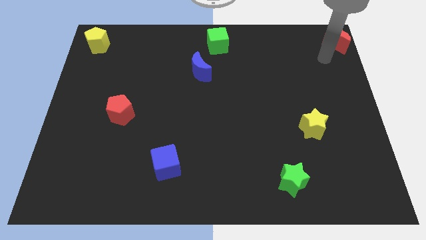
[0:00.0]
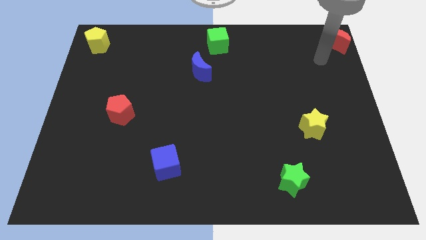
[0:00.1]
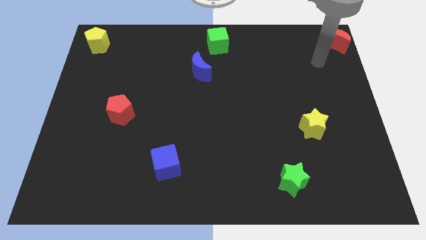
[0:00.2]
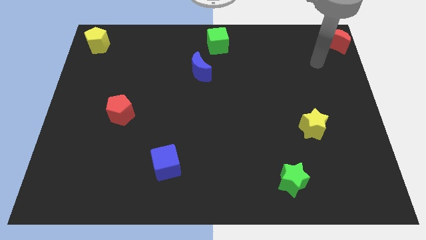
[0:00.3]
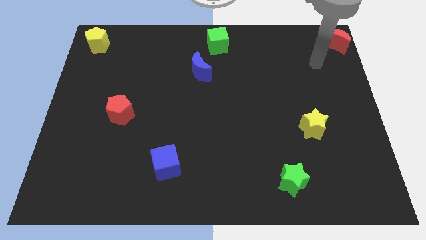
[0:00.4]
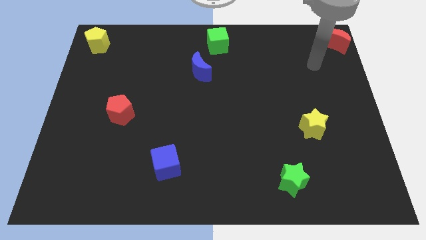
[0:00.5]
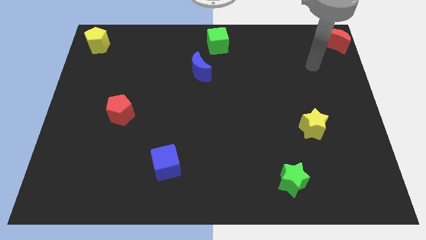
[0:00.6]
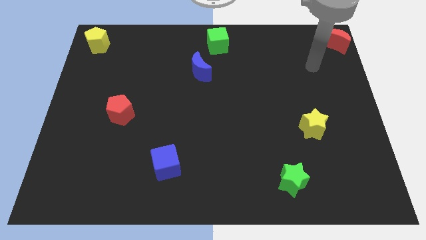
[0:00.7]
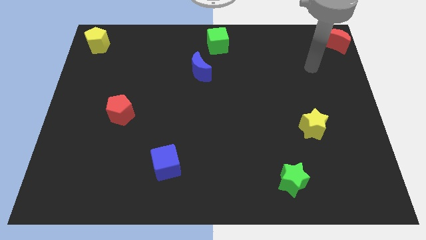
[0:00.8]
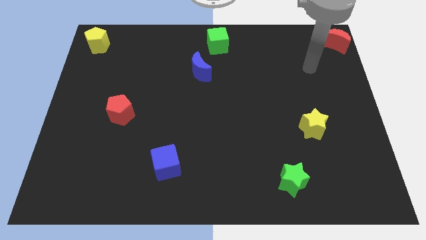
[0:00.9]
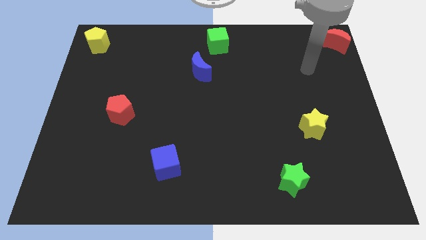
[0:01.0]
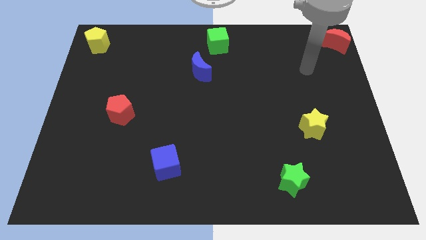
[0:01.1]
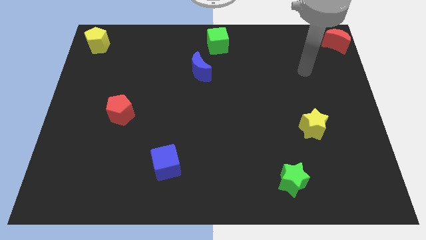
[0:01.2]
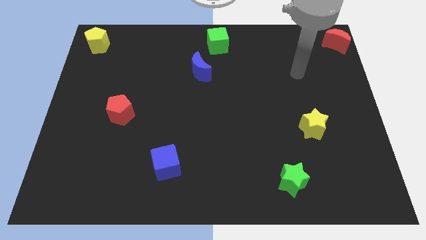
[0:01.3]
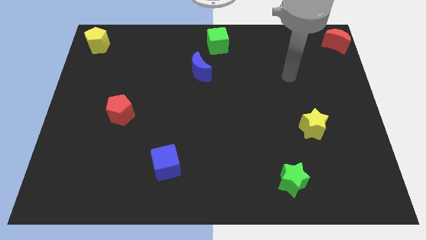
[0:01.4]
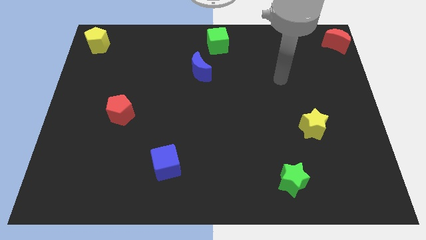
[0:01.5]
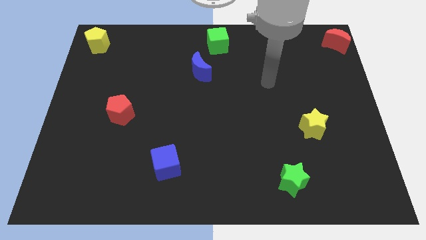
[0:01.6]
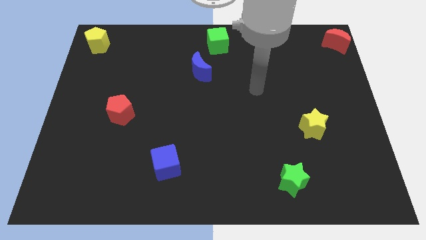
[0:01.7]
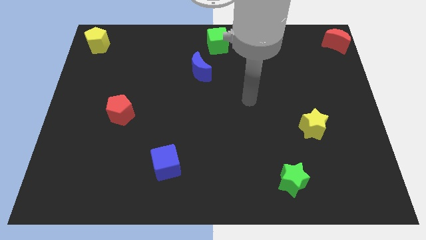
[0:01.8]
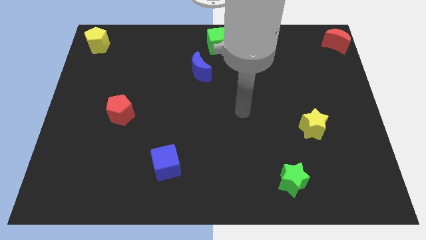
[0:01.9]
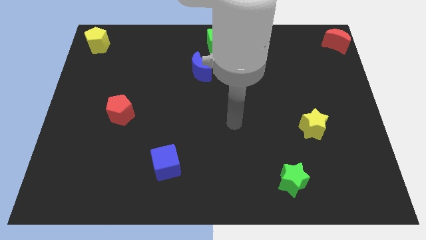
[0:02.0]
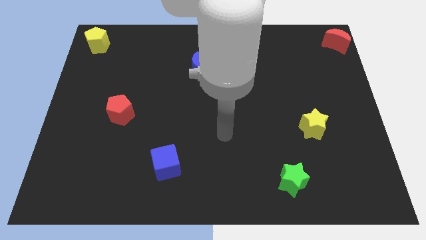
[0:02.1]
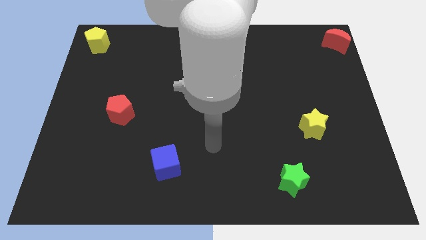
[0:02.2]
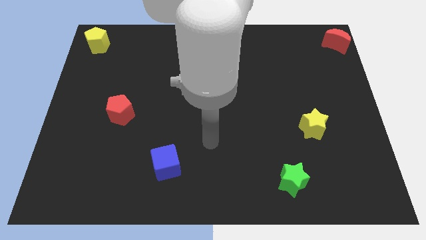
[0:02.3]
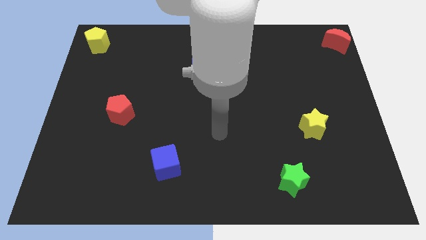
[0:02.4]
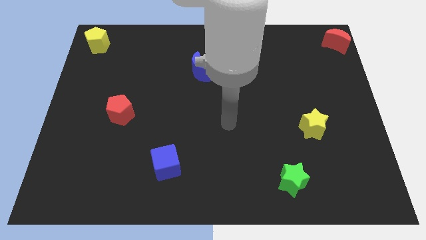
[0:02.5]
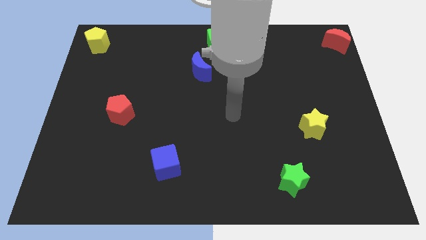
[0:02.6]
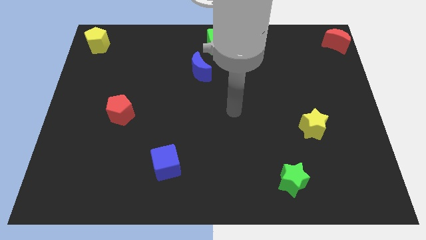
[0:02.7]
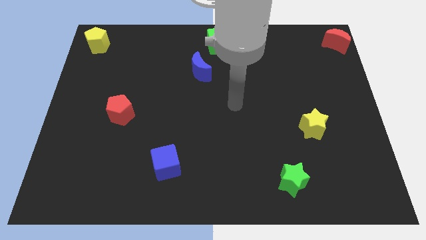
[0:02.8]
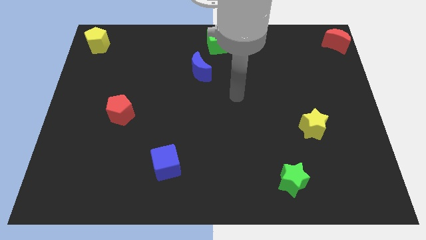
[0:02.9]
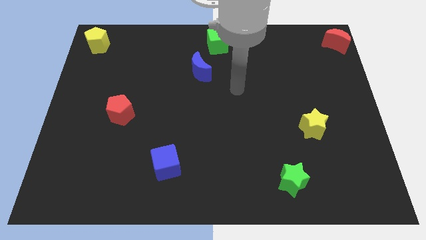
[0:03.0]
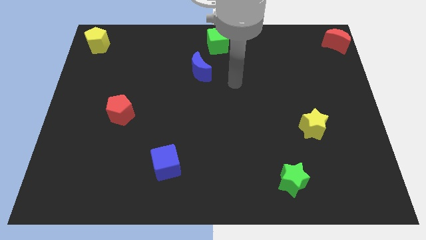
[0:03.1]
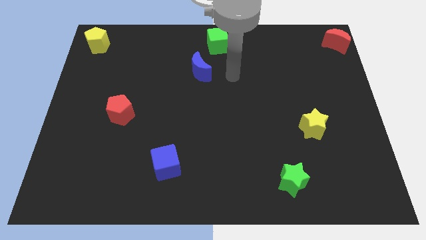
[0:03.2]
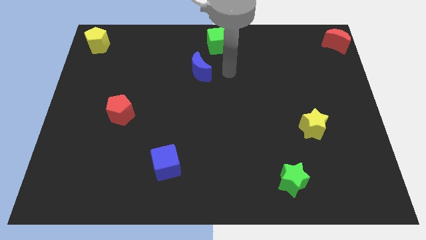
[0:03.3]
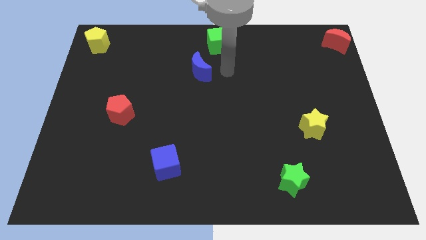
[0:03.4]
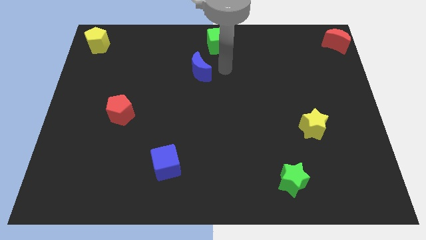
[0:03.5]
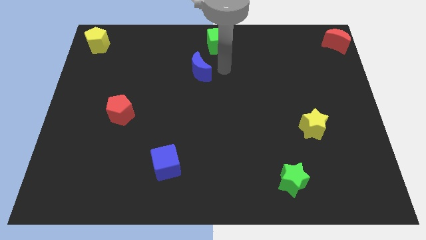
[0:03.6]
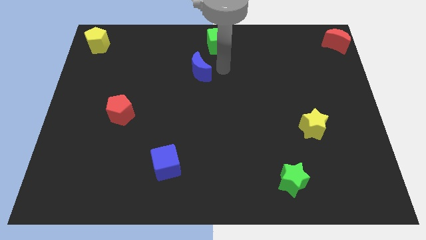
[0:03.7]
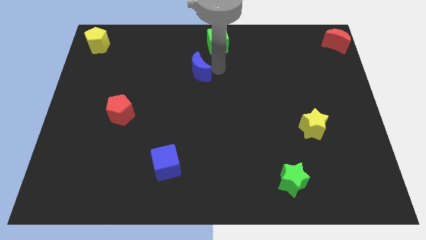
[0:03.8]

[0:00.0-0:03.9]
move your arm away from the red moon

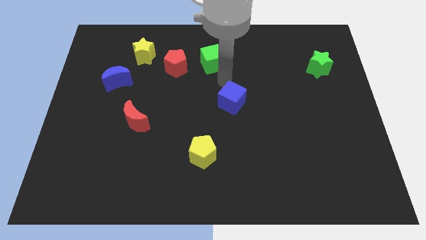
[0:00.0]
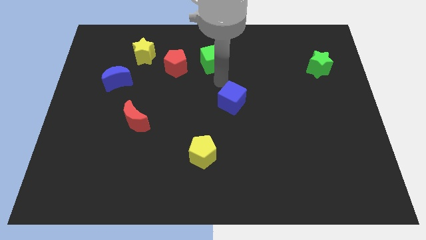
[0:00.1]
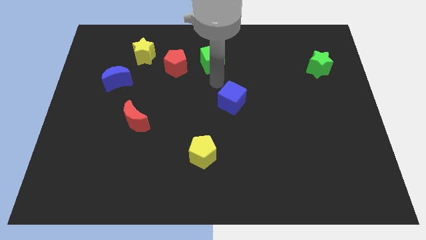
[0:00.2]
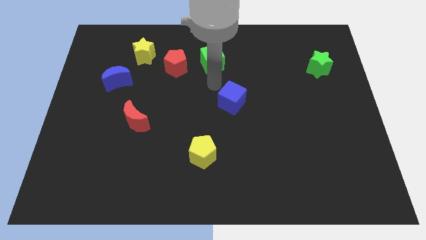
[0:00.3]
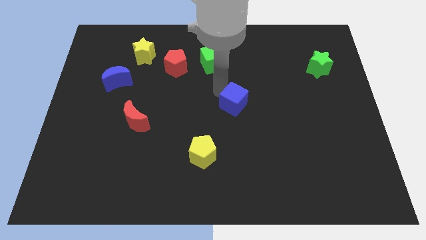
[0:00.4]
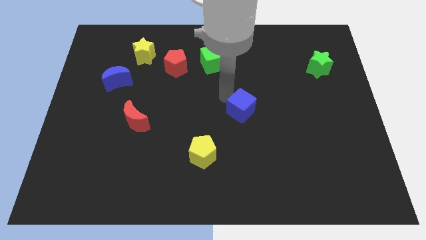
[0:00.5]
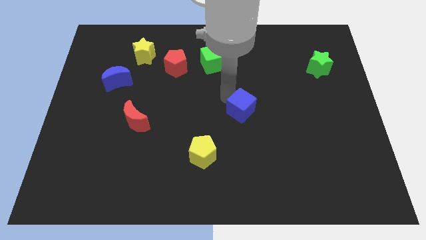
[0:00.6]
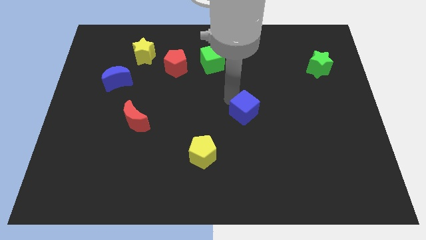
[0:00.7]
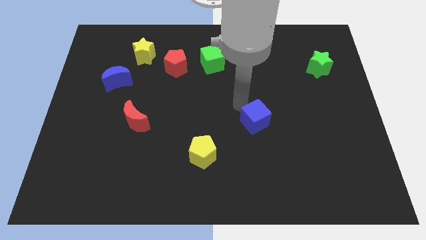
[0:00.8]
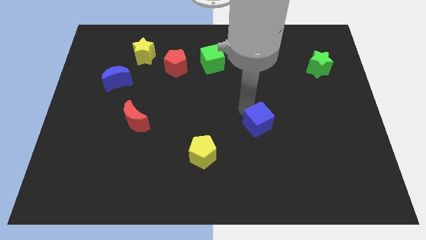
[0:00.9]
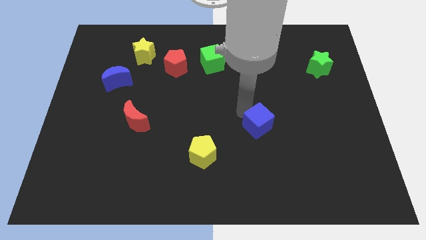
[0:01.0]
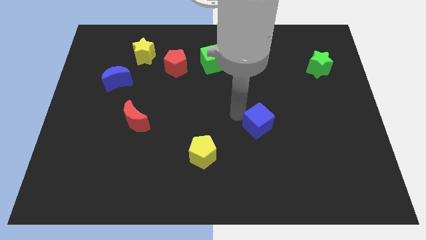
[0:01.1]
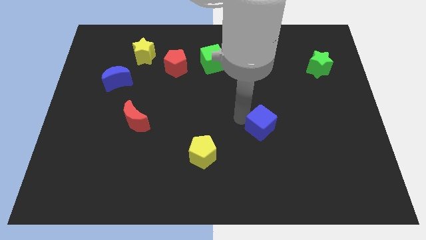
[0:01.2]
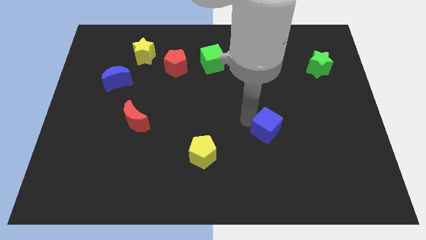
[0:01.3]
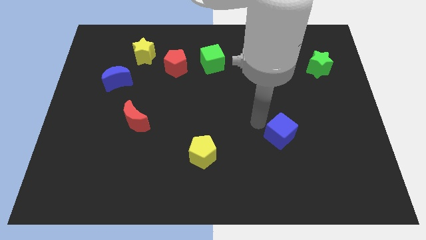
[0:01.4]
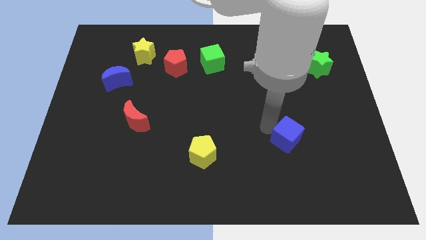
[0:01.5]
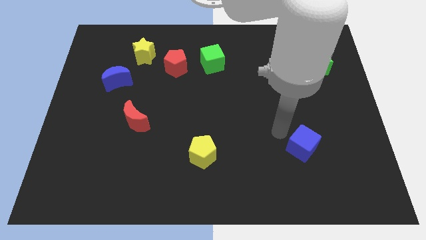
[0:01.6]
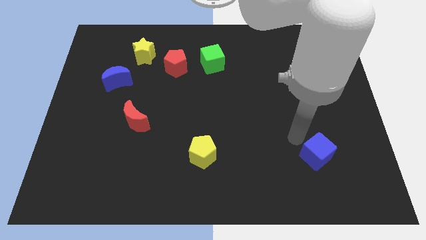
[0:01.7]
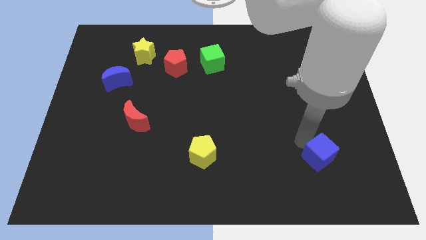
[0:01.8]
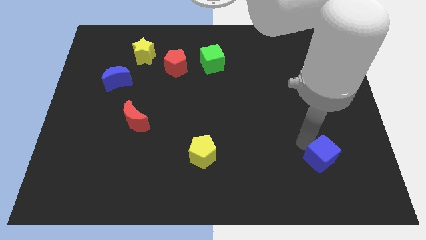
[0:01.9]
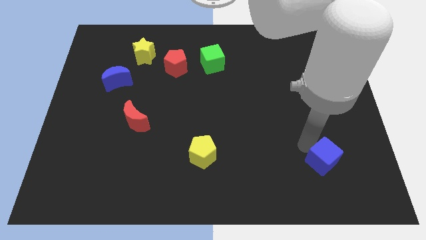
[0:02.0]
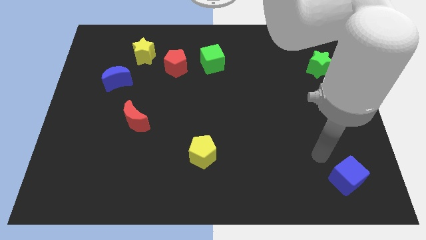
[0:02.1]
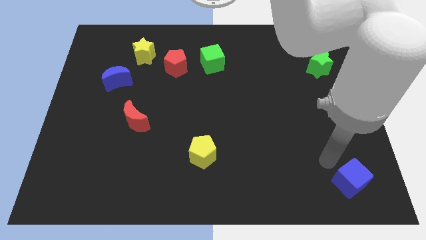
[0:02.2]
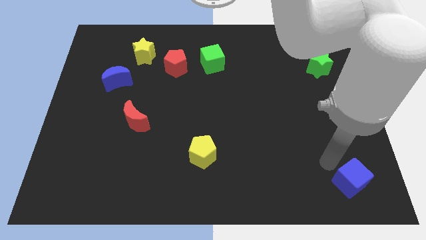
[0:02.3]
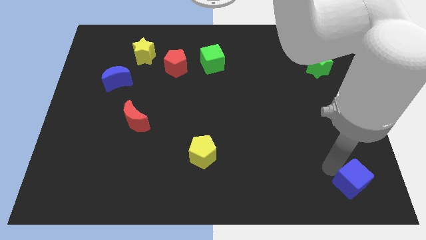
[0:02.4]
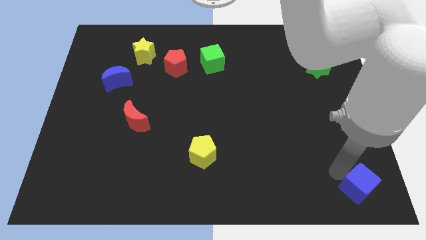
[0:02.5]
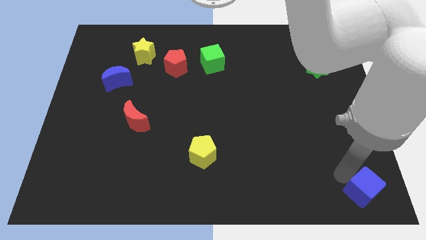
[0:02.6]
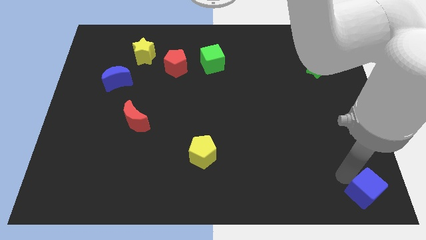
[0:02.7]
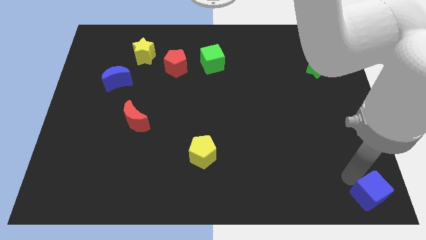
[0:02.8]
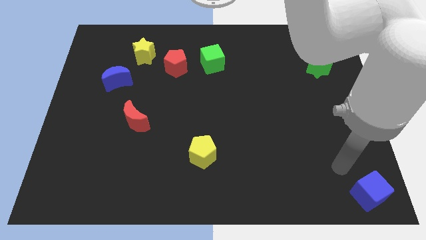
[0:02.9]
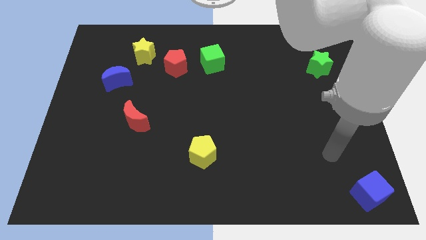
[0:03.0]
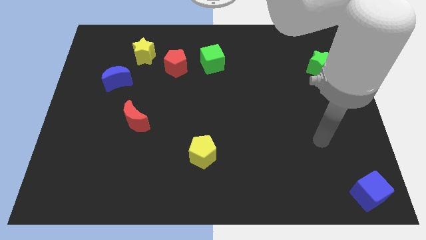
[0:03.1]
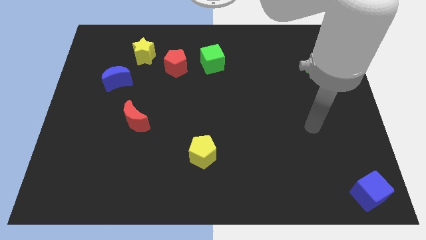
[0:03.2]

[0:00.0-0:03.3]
push the blue cube to the bottom rigth corner

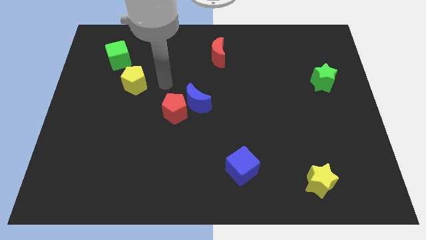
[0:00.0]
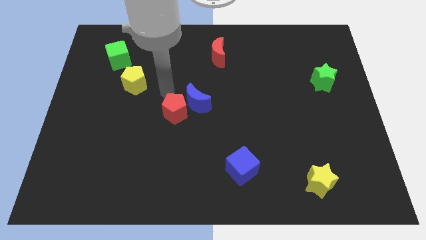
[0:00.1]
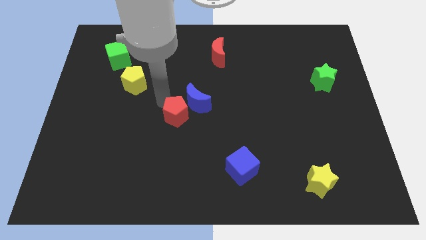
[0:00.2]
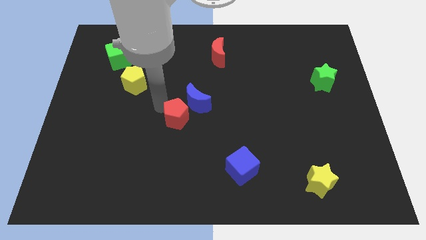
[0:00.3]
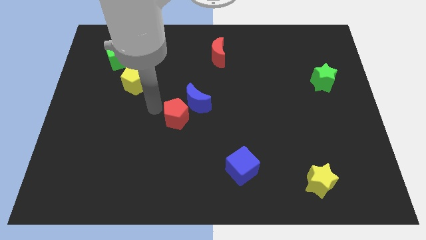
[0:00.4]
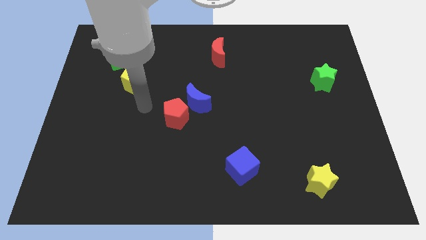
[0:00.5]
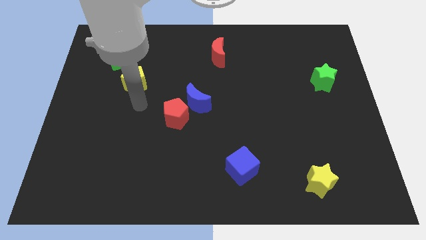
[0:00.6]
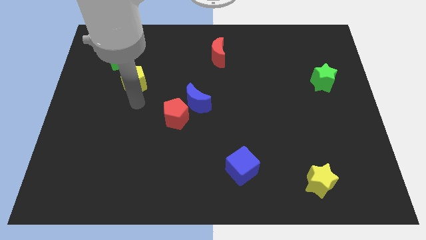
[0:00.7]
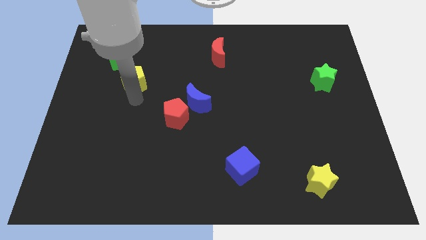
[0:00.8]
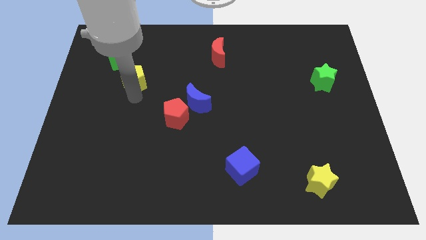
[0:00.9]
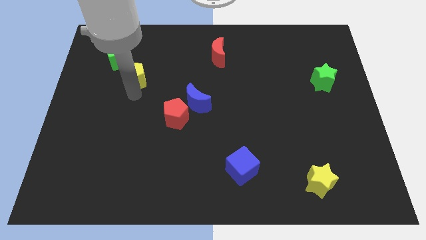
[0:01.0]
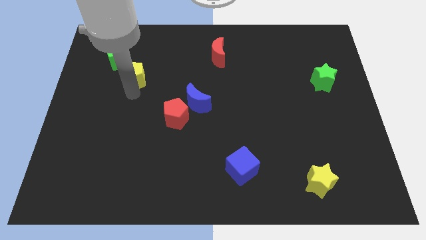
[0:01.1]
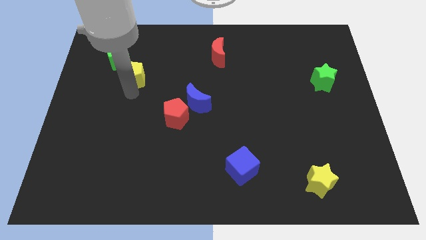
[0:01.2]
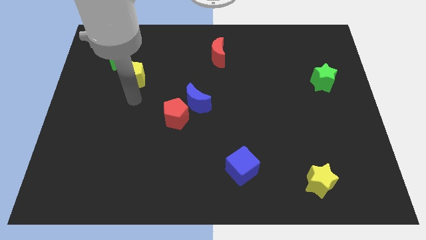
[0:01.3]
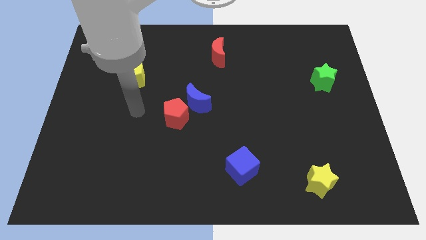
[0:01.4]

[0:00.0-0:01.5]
slightly push yellow pentagon upwards

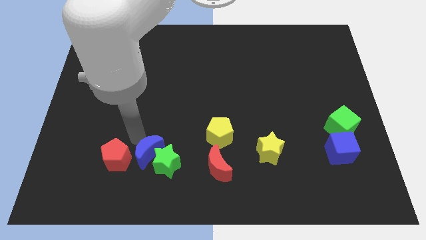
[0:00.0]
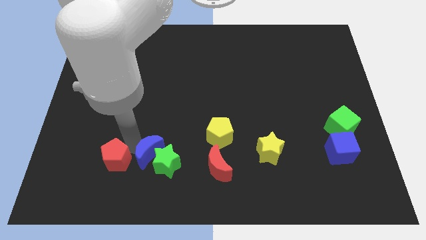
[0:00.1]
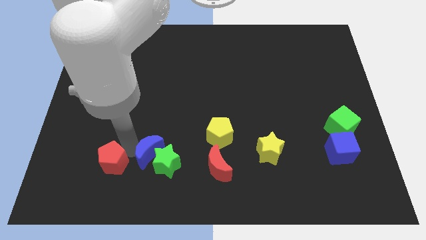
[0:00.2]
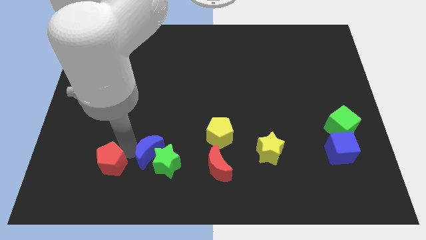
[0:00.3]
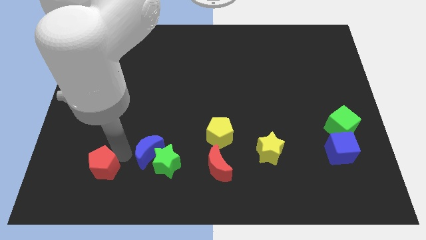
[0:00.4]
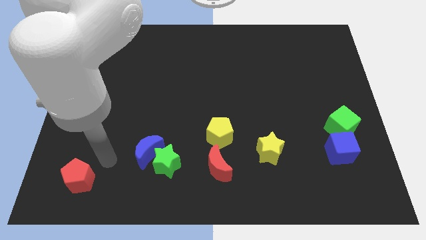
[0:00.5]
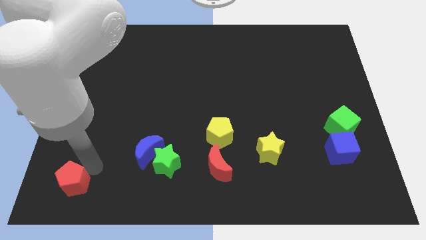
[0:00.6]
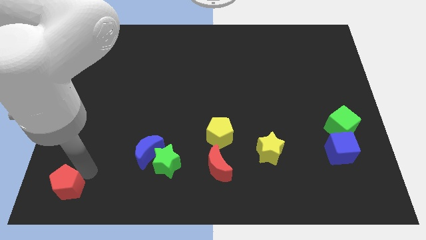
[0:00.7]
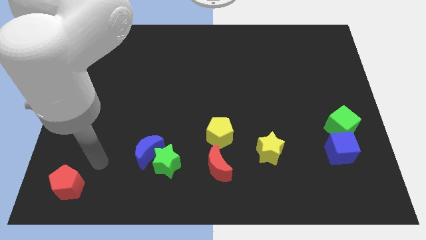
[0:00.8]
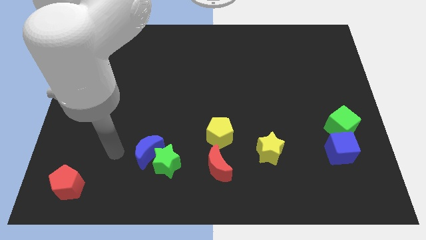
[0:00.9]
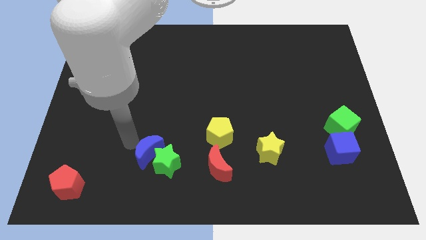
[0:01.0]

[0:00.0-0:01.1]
move the red pentagon to the bottom left of the board
